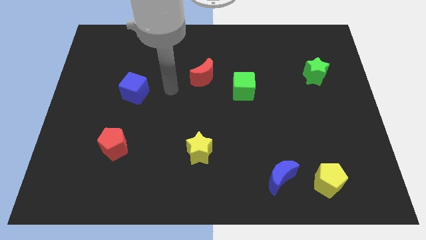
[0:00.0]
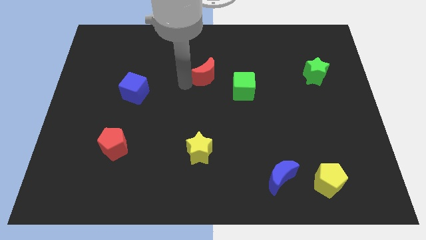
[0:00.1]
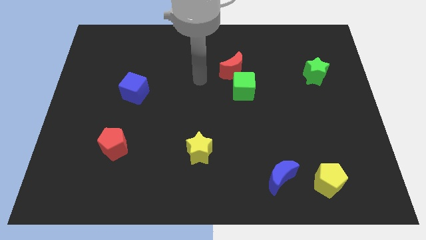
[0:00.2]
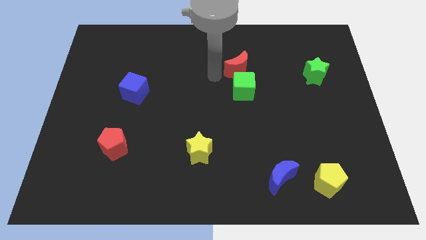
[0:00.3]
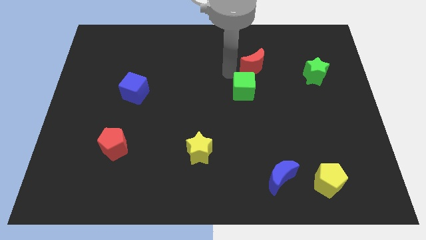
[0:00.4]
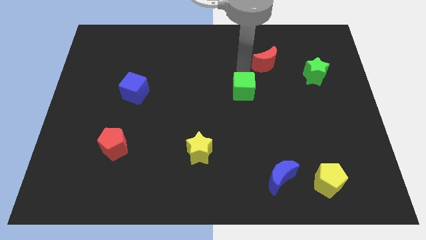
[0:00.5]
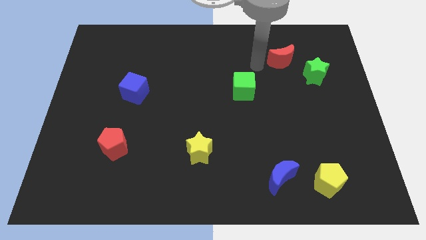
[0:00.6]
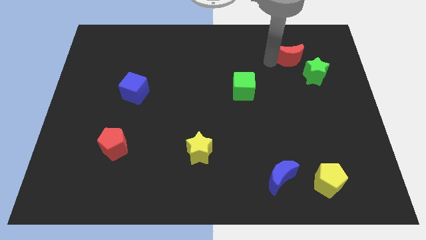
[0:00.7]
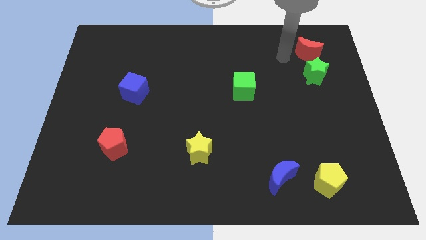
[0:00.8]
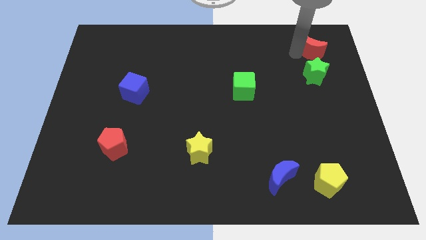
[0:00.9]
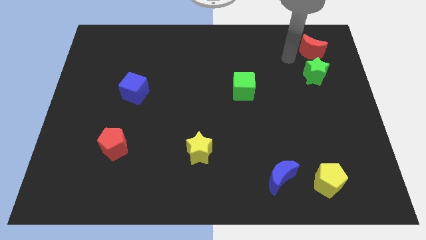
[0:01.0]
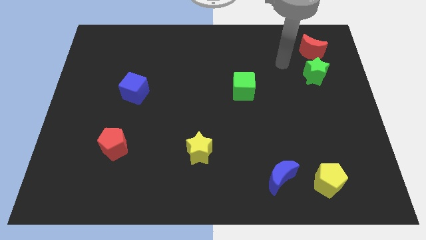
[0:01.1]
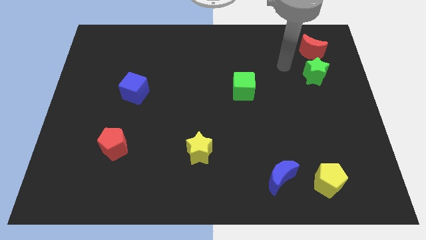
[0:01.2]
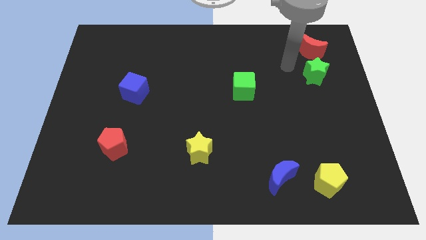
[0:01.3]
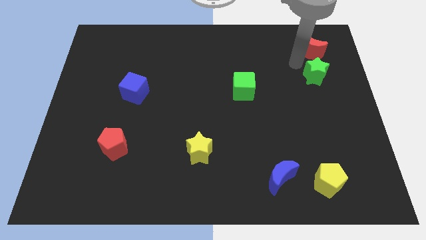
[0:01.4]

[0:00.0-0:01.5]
push the red moon to the top side of green star

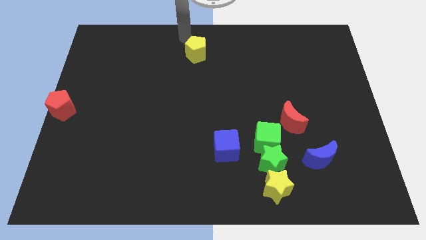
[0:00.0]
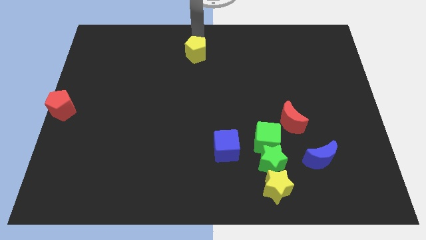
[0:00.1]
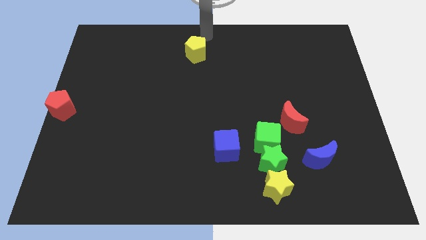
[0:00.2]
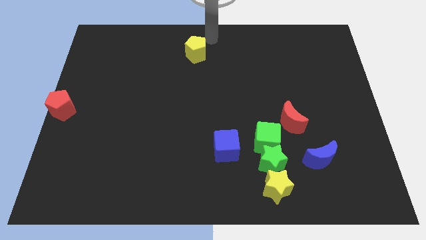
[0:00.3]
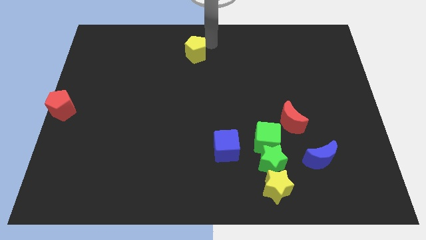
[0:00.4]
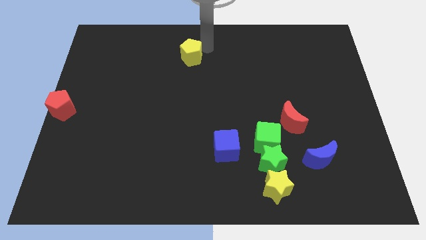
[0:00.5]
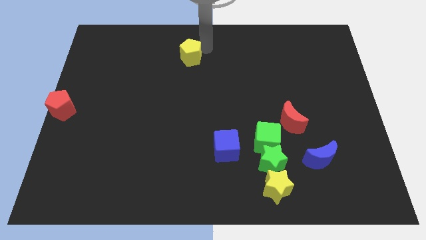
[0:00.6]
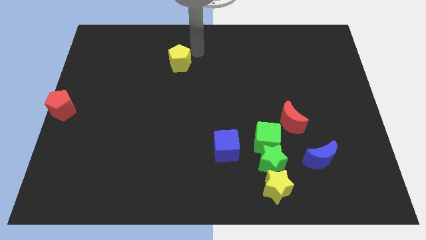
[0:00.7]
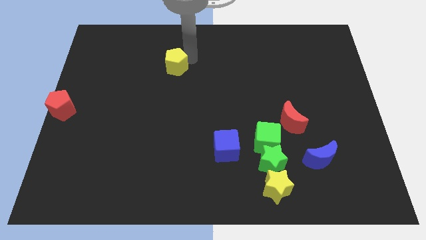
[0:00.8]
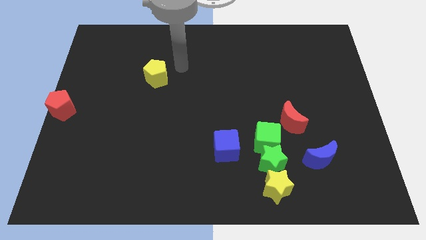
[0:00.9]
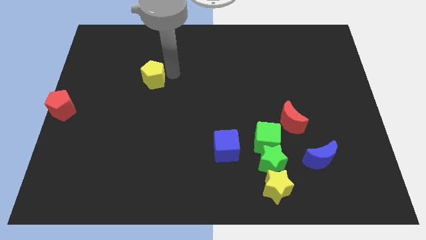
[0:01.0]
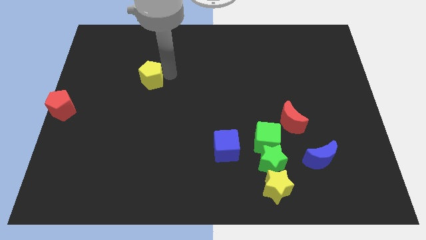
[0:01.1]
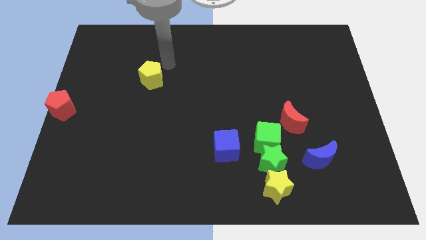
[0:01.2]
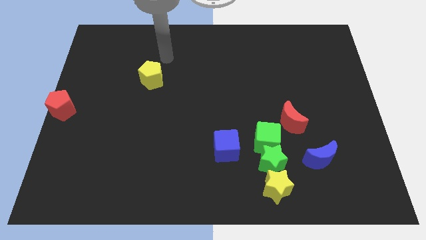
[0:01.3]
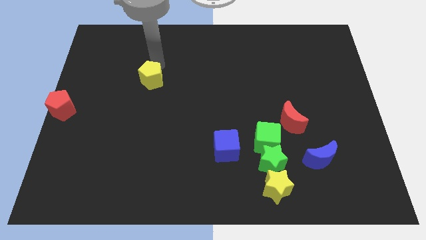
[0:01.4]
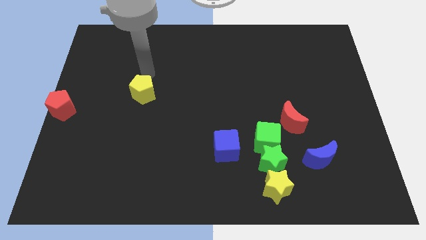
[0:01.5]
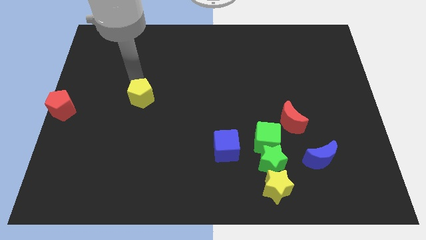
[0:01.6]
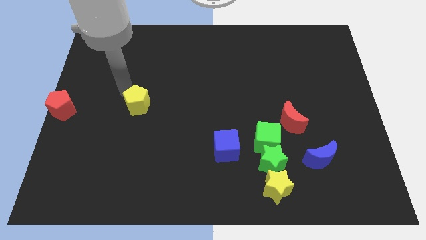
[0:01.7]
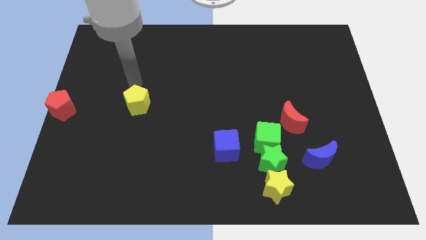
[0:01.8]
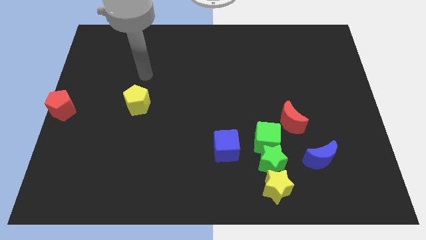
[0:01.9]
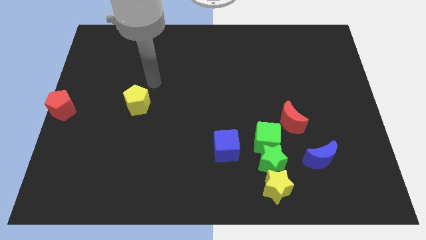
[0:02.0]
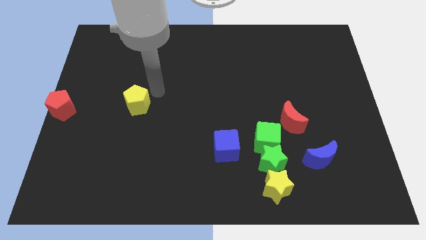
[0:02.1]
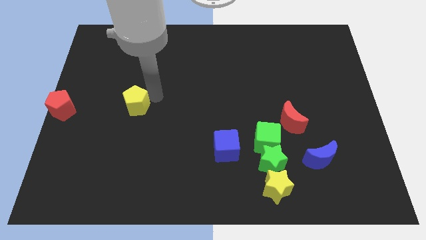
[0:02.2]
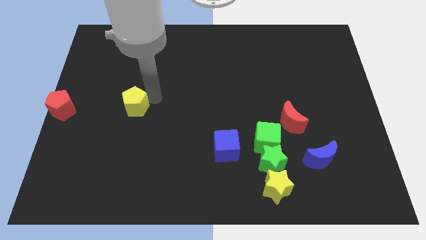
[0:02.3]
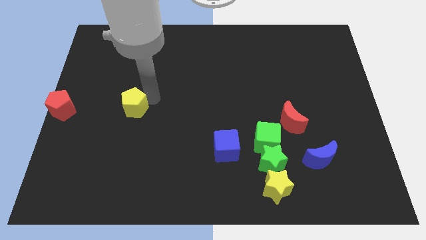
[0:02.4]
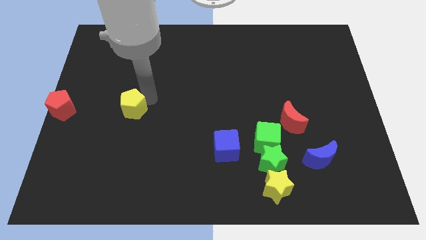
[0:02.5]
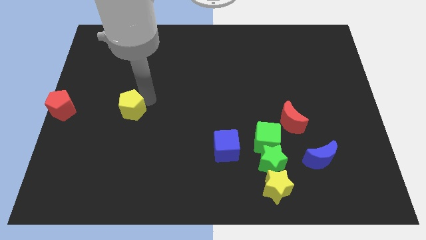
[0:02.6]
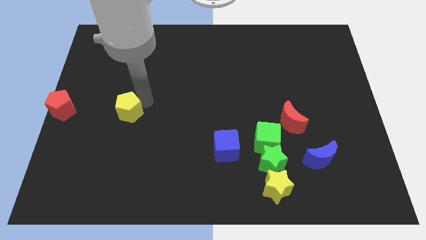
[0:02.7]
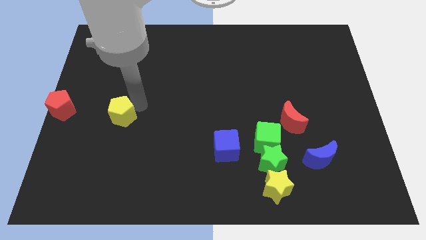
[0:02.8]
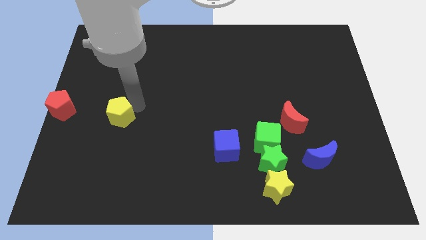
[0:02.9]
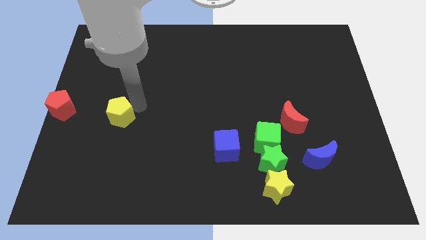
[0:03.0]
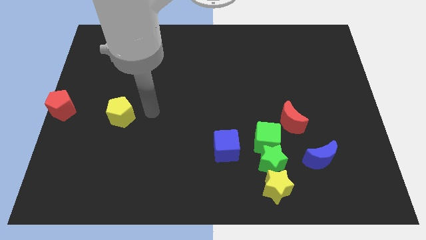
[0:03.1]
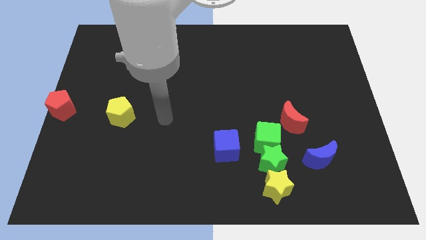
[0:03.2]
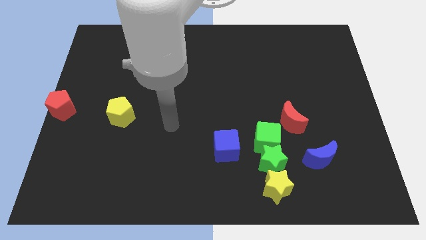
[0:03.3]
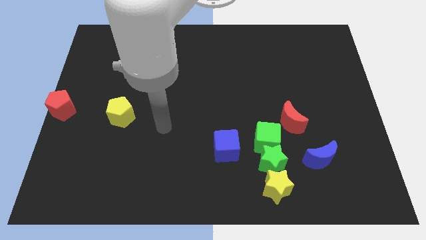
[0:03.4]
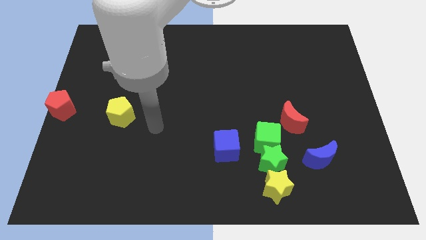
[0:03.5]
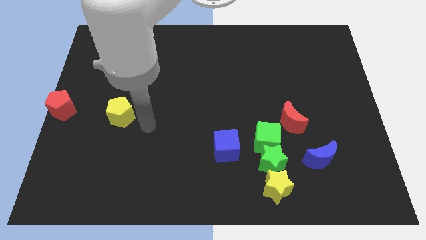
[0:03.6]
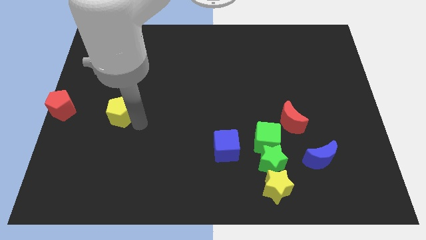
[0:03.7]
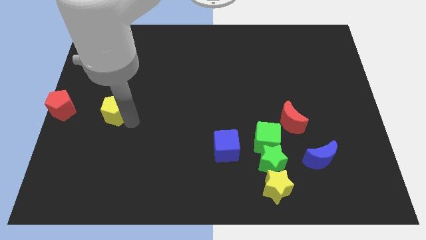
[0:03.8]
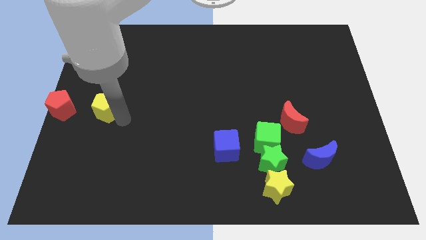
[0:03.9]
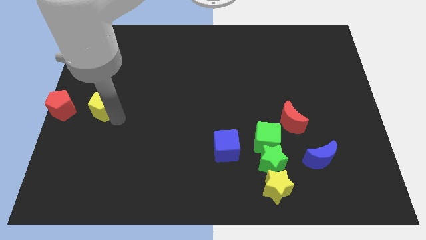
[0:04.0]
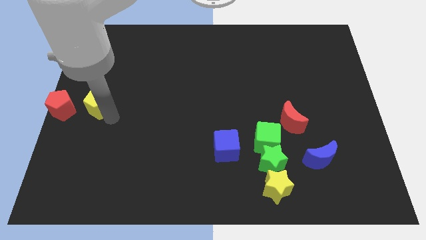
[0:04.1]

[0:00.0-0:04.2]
place the yellow pentagon parallel right to the red pentagon

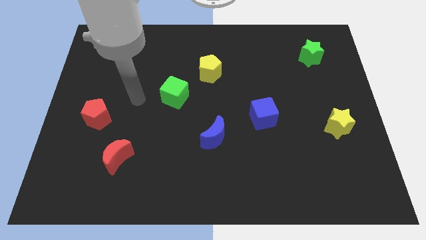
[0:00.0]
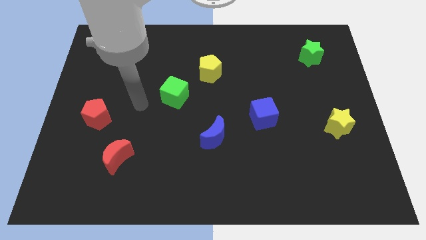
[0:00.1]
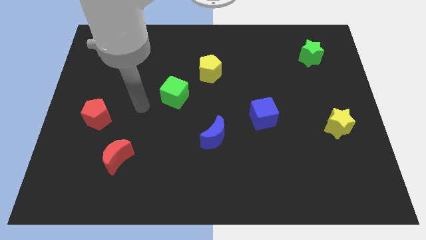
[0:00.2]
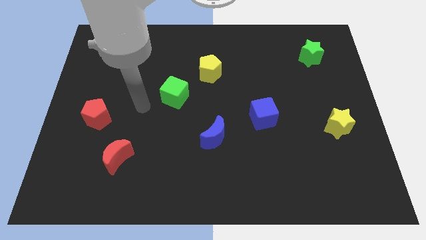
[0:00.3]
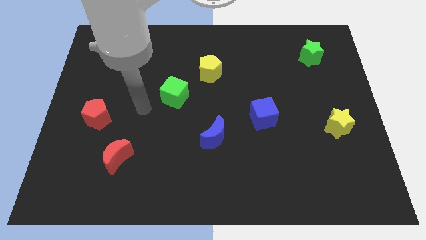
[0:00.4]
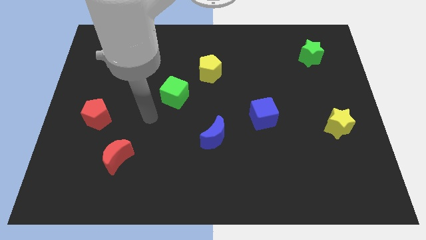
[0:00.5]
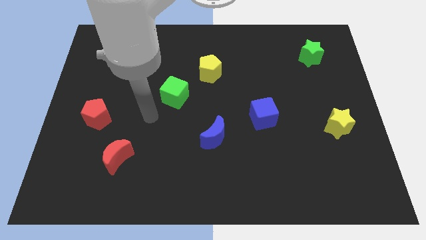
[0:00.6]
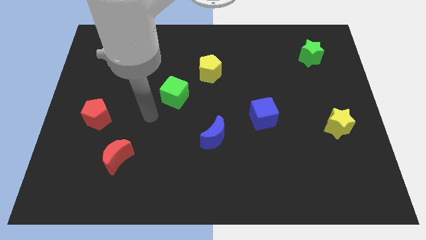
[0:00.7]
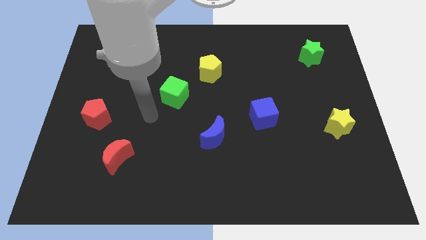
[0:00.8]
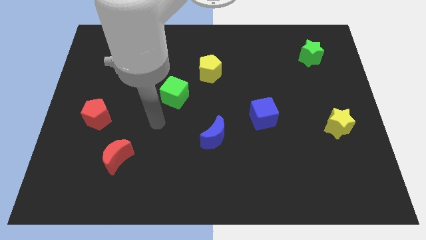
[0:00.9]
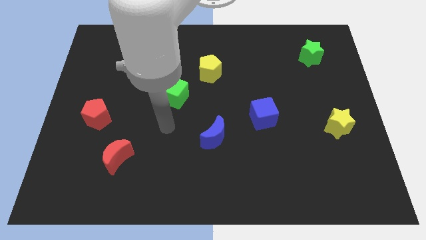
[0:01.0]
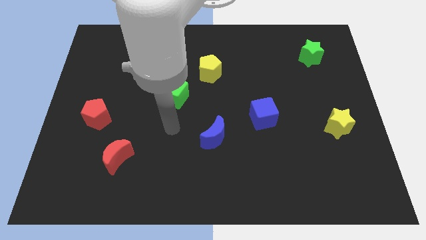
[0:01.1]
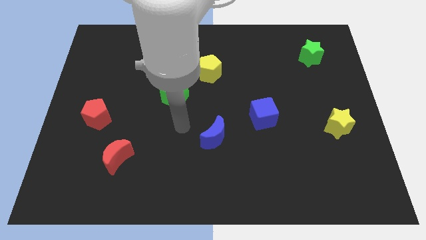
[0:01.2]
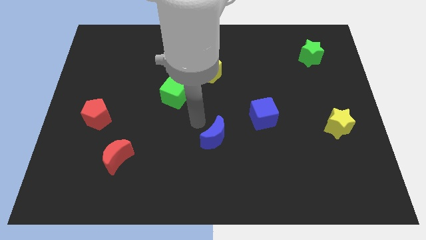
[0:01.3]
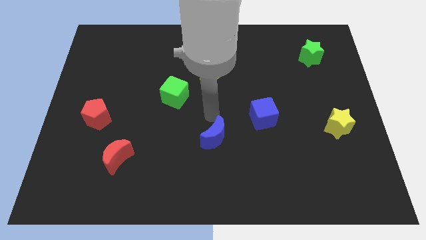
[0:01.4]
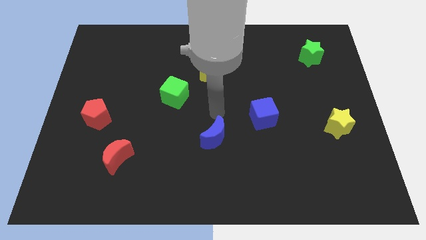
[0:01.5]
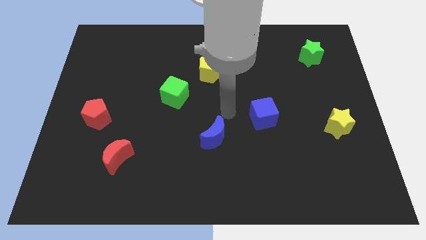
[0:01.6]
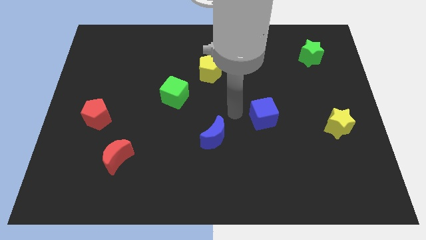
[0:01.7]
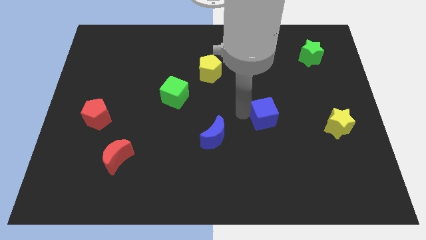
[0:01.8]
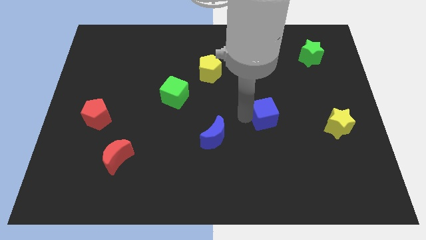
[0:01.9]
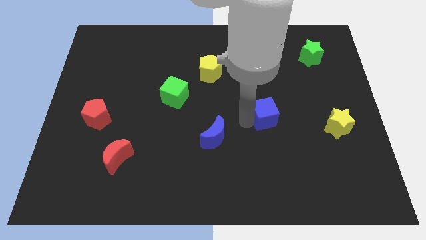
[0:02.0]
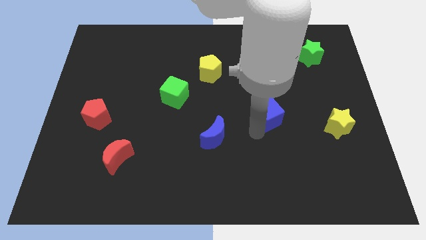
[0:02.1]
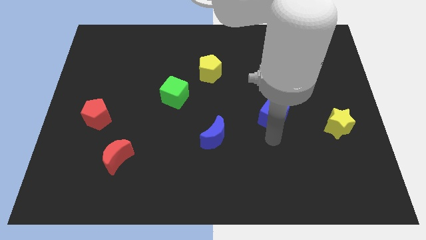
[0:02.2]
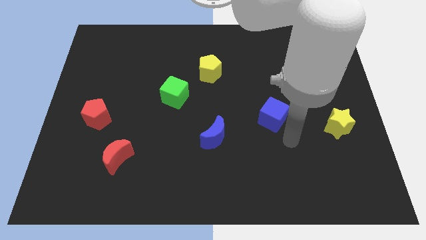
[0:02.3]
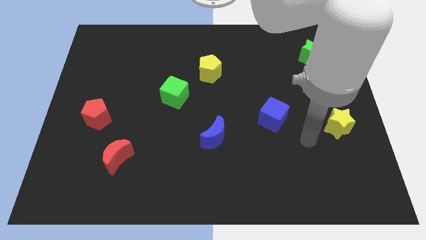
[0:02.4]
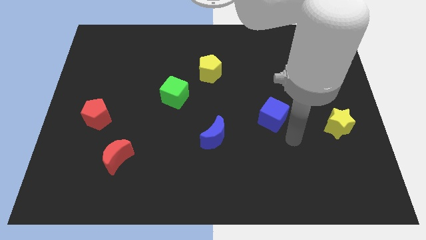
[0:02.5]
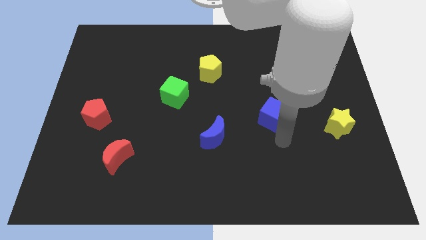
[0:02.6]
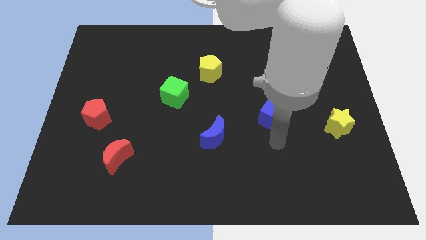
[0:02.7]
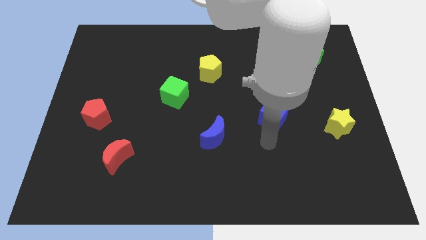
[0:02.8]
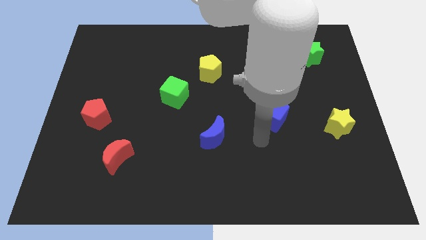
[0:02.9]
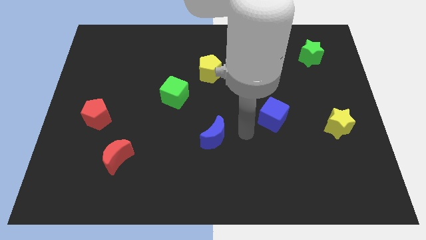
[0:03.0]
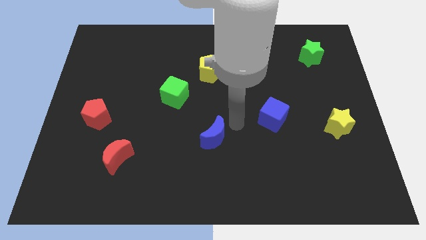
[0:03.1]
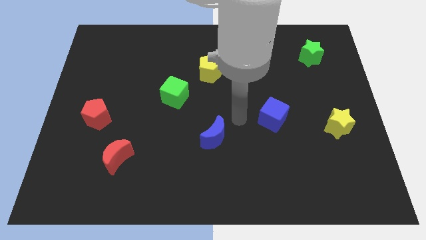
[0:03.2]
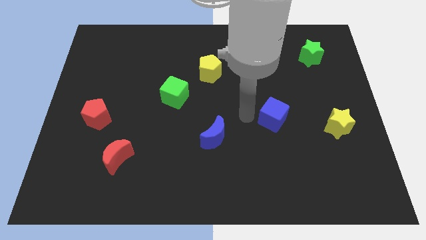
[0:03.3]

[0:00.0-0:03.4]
move the arm to the left of the blue cube
